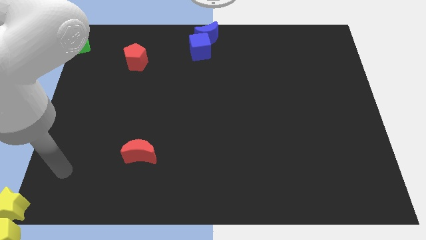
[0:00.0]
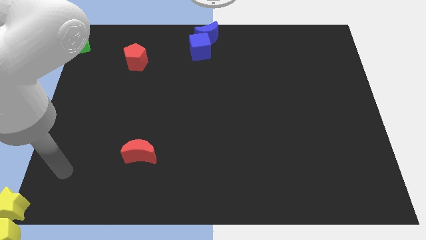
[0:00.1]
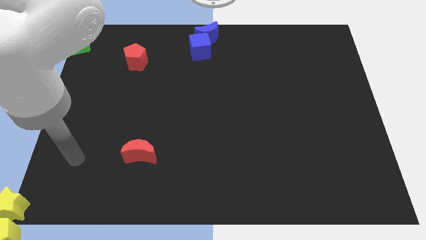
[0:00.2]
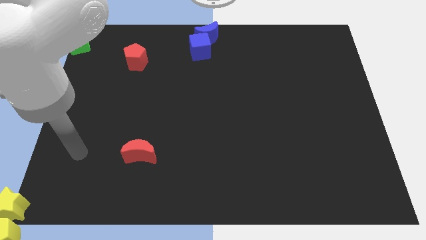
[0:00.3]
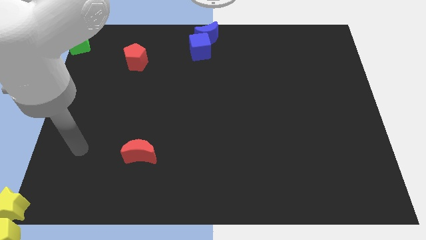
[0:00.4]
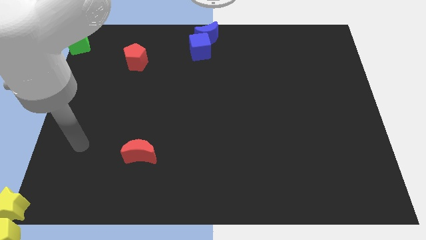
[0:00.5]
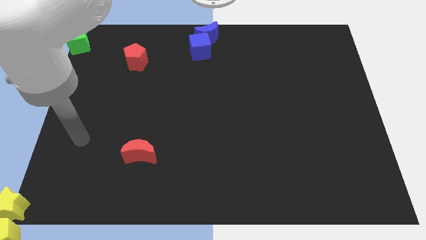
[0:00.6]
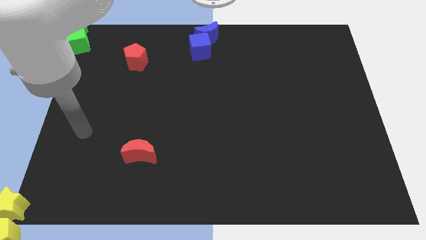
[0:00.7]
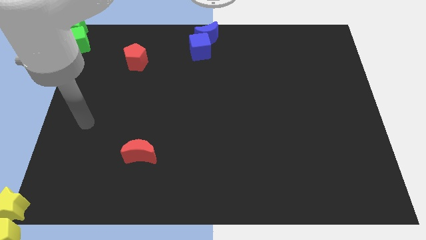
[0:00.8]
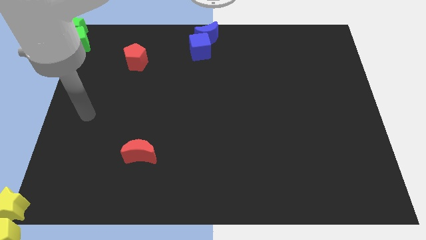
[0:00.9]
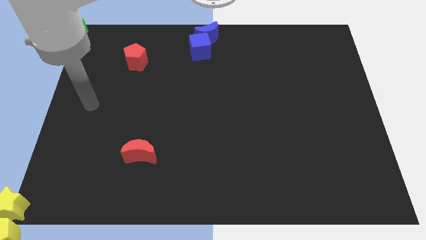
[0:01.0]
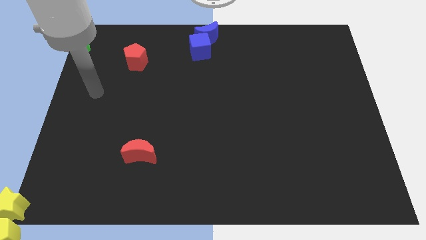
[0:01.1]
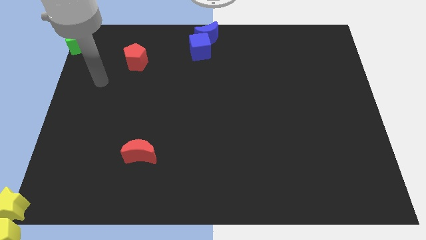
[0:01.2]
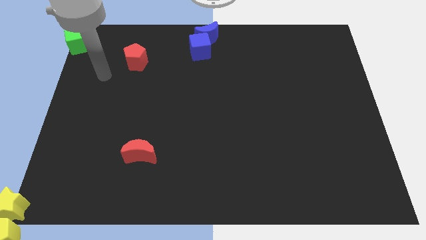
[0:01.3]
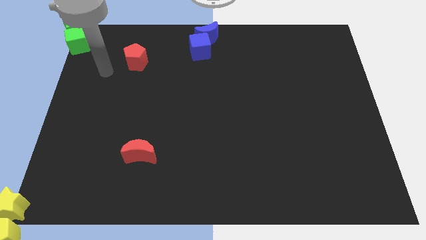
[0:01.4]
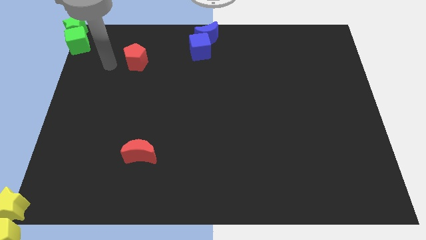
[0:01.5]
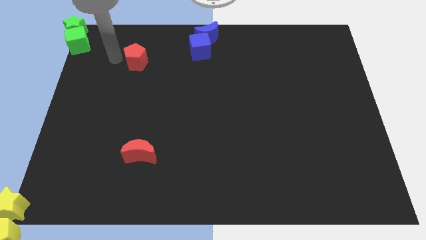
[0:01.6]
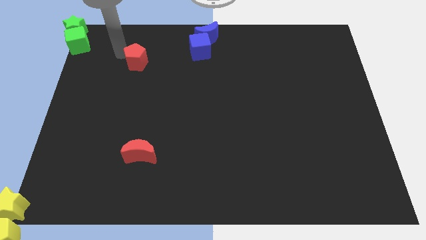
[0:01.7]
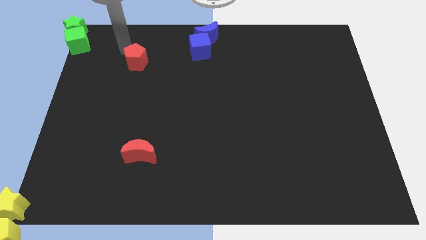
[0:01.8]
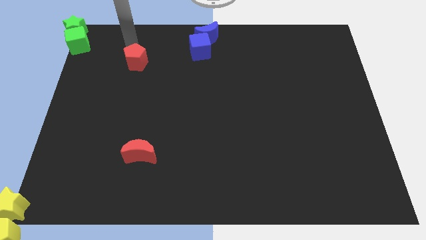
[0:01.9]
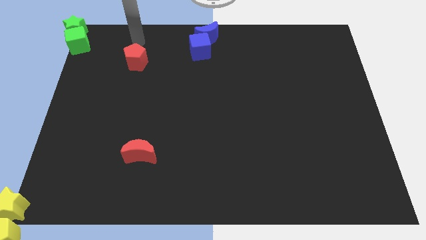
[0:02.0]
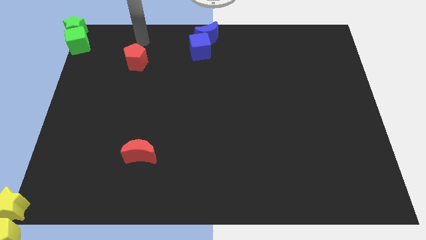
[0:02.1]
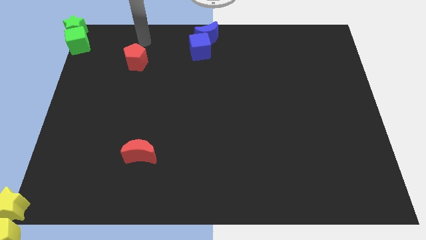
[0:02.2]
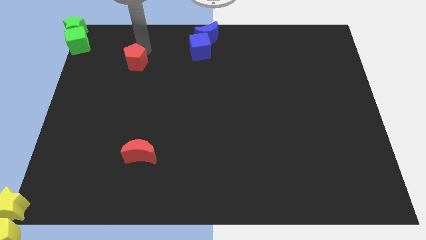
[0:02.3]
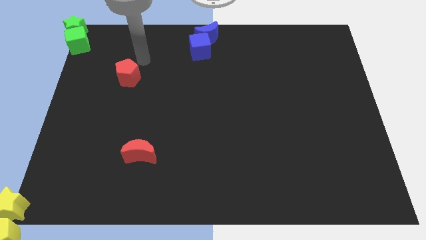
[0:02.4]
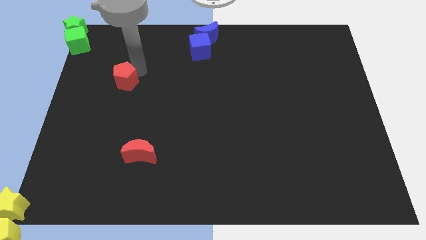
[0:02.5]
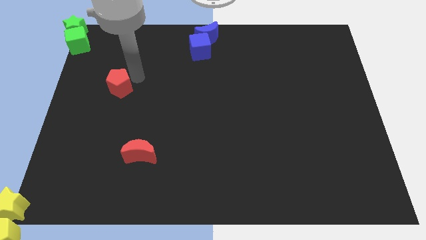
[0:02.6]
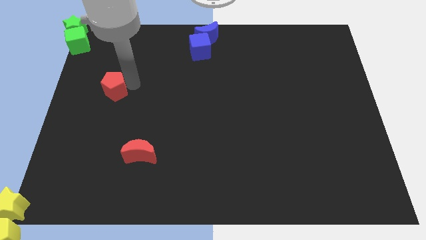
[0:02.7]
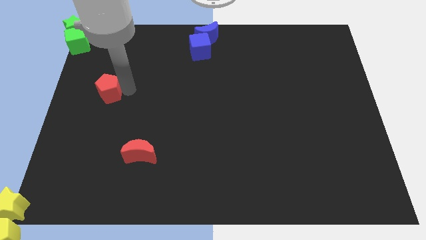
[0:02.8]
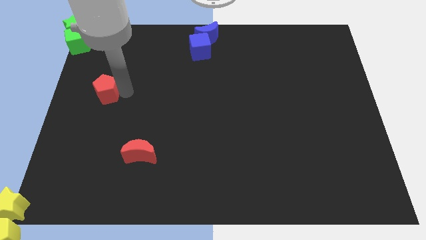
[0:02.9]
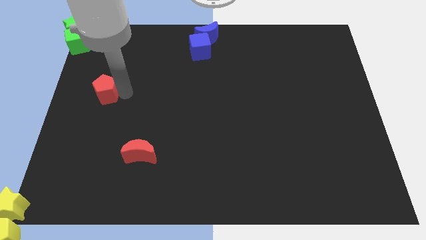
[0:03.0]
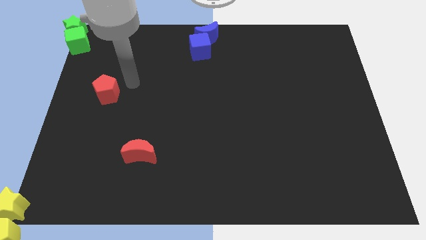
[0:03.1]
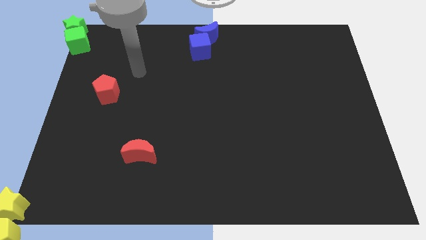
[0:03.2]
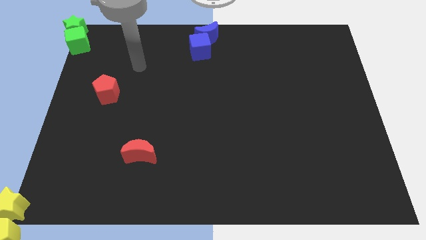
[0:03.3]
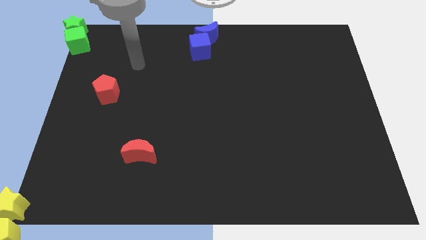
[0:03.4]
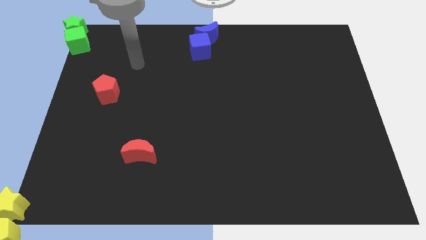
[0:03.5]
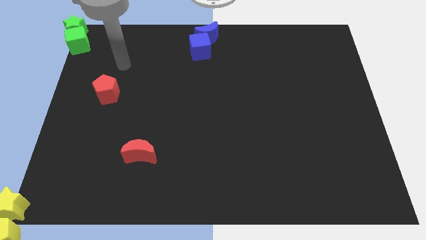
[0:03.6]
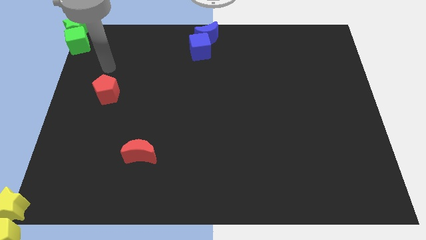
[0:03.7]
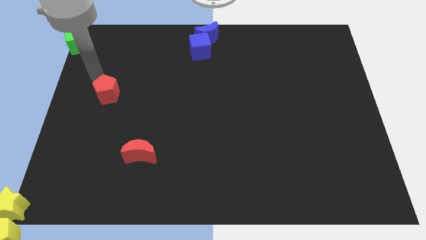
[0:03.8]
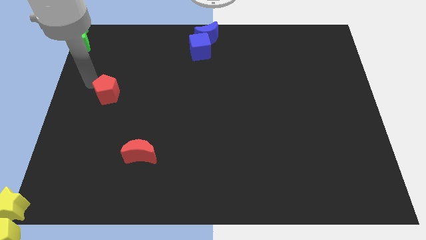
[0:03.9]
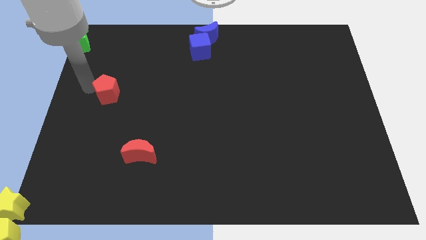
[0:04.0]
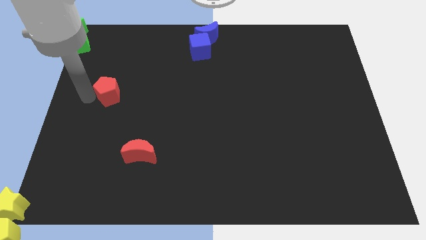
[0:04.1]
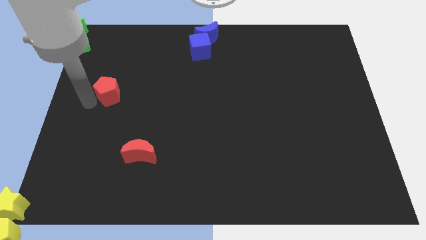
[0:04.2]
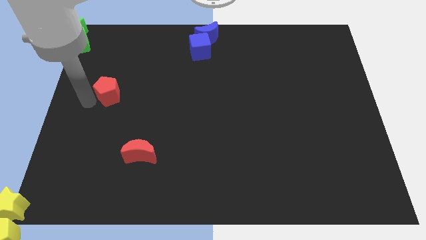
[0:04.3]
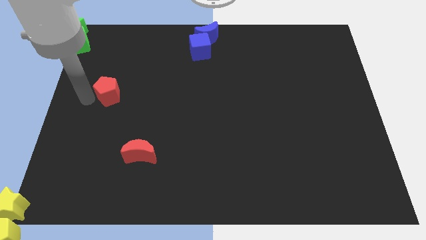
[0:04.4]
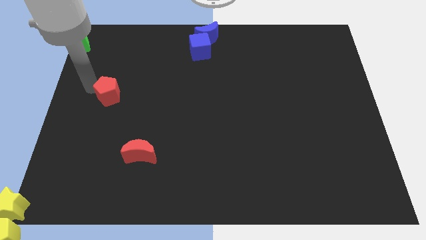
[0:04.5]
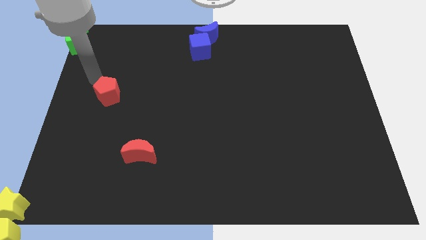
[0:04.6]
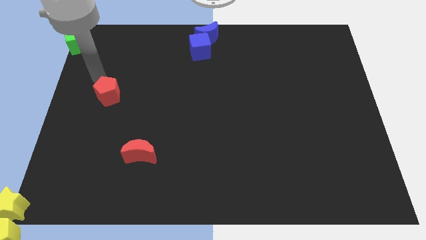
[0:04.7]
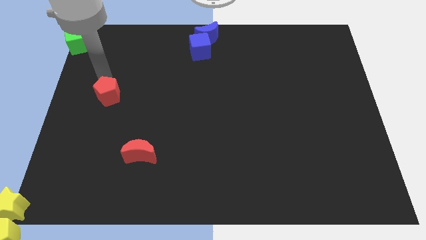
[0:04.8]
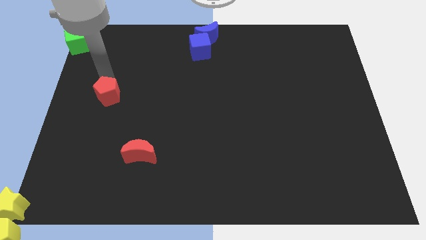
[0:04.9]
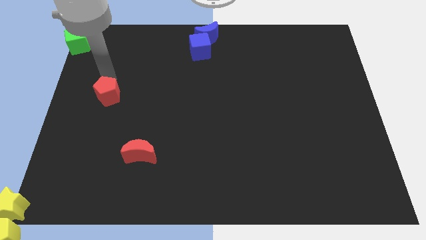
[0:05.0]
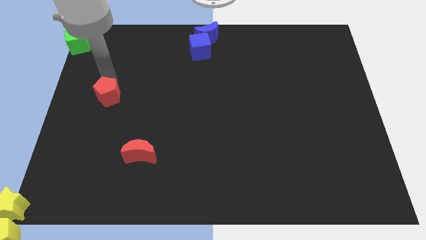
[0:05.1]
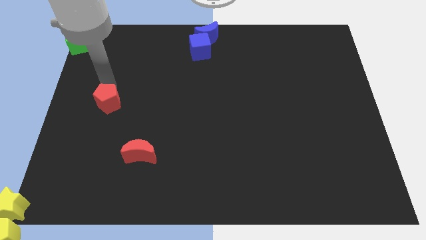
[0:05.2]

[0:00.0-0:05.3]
place the red pentagon diagonally to blue cube

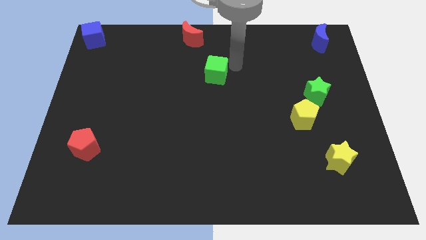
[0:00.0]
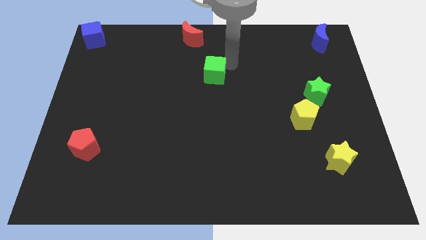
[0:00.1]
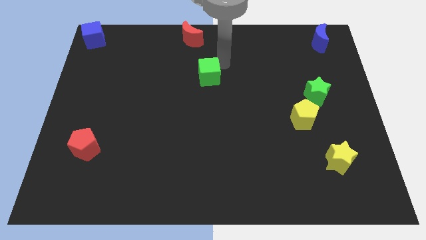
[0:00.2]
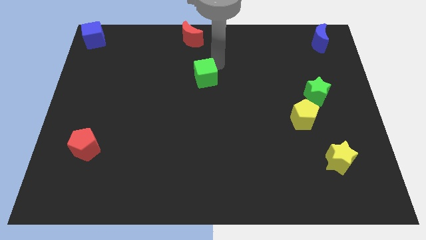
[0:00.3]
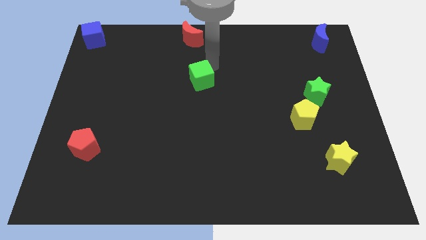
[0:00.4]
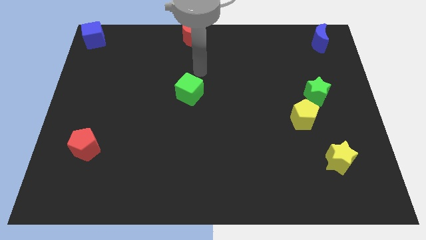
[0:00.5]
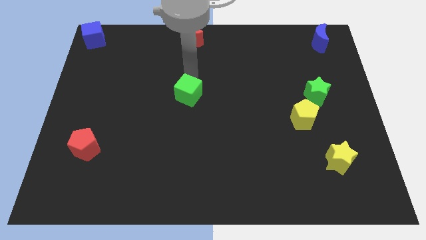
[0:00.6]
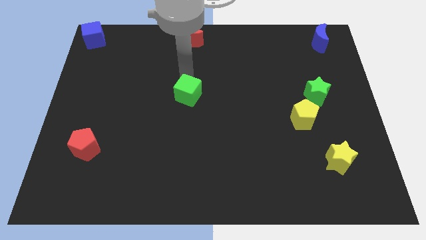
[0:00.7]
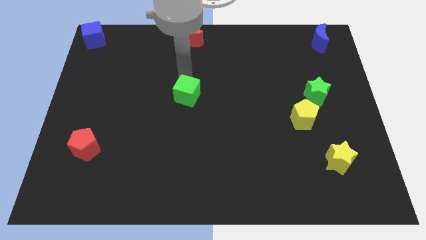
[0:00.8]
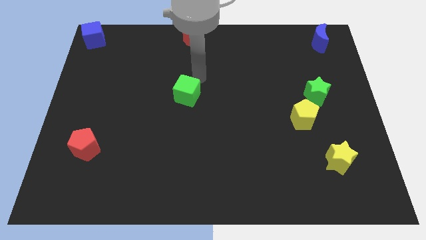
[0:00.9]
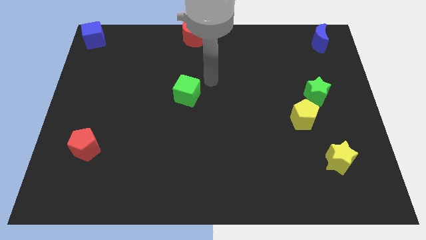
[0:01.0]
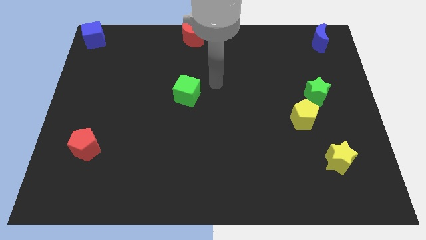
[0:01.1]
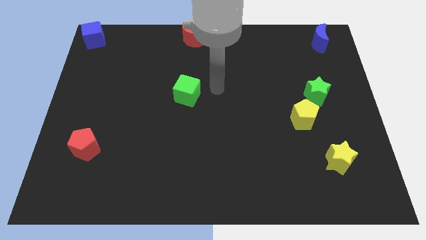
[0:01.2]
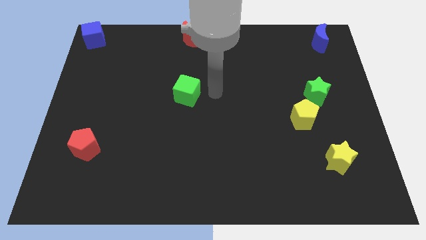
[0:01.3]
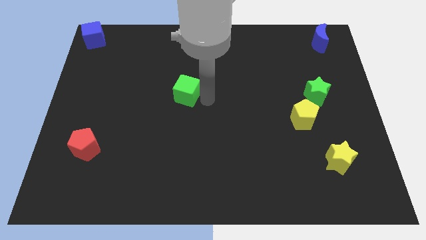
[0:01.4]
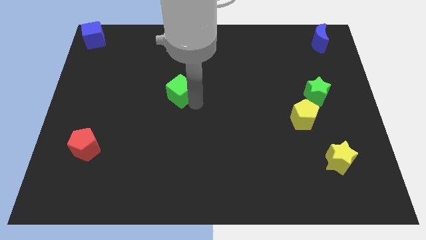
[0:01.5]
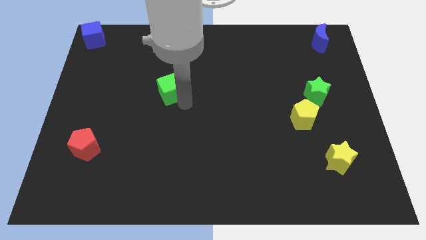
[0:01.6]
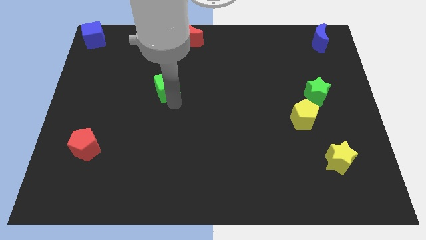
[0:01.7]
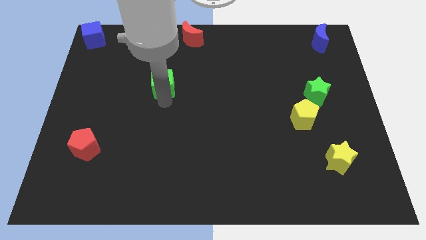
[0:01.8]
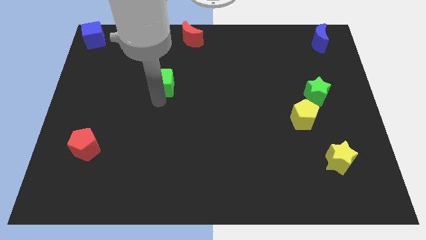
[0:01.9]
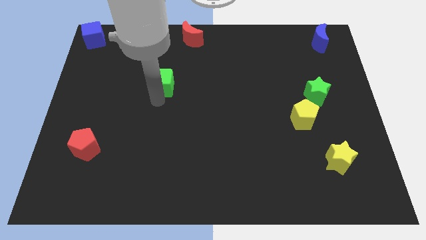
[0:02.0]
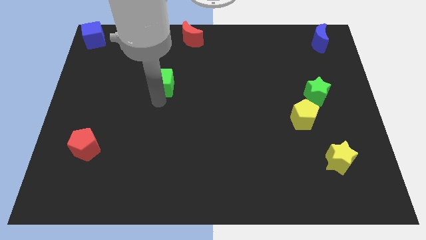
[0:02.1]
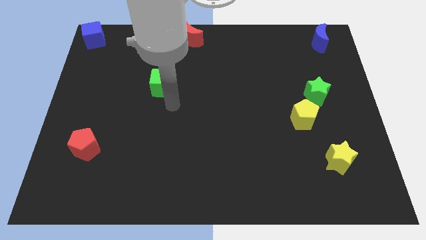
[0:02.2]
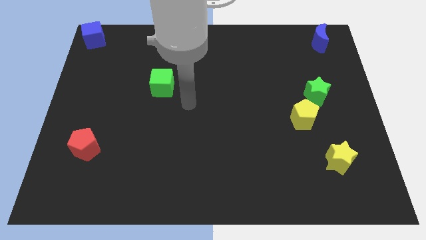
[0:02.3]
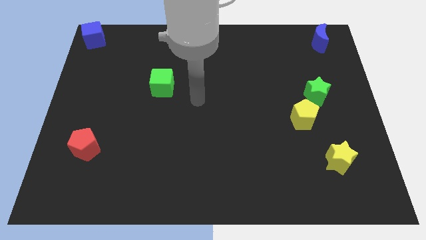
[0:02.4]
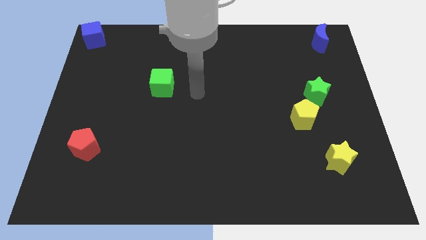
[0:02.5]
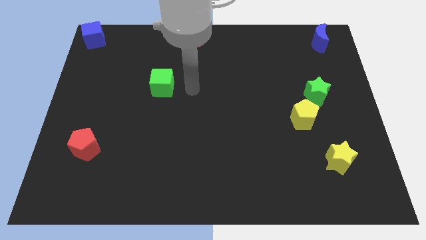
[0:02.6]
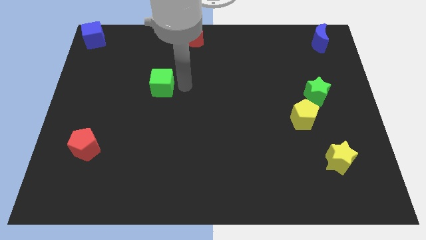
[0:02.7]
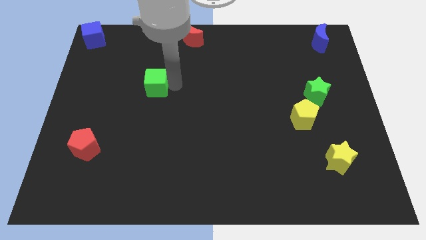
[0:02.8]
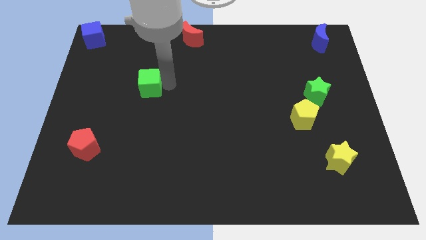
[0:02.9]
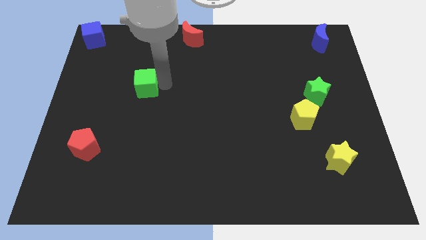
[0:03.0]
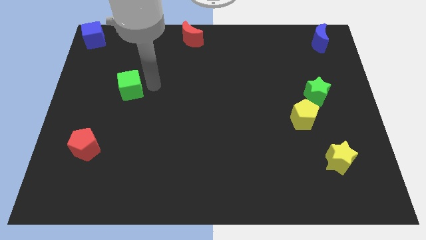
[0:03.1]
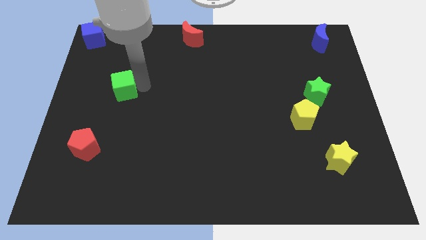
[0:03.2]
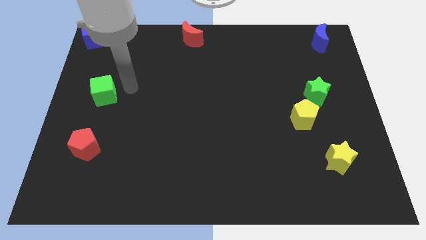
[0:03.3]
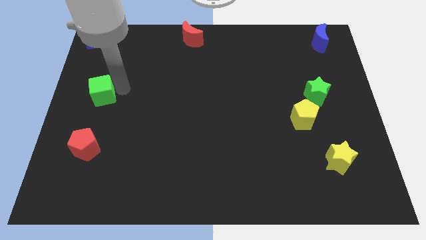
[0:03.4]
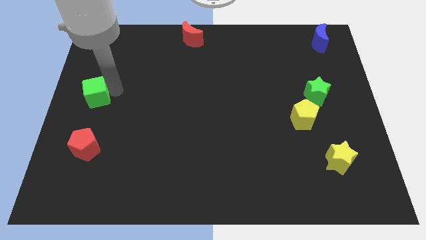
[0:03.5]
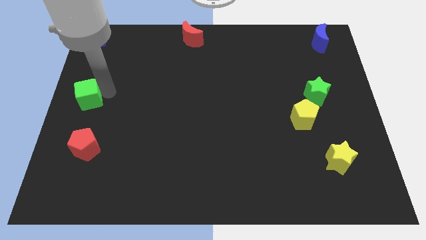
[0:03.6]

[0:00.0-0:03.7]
move the green cube diagonal to the top of the red pentagon
